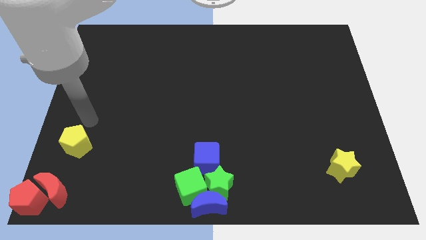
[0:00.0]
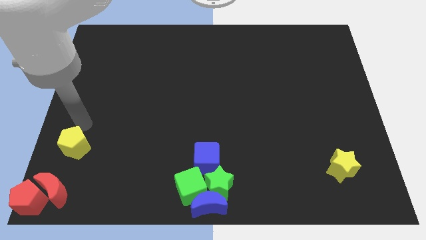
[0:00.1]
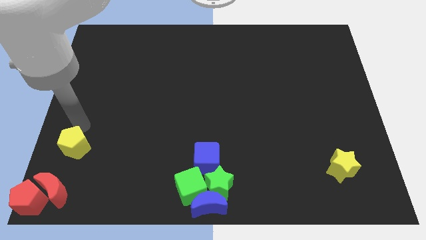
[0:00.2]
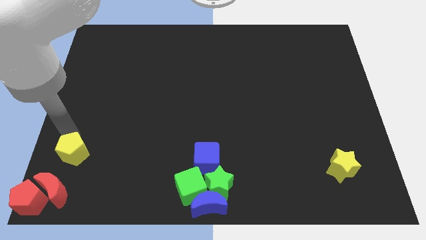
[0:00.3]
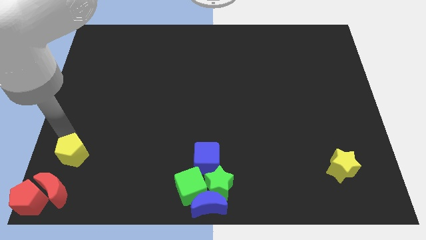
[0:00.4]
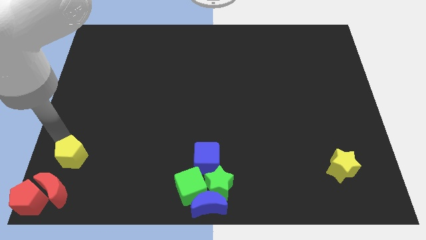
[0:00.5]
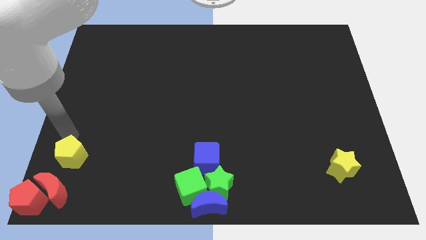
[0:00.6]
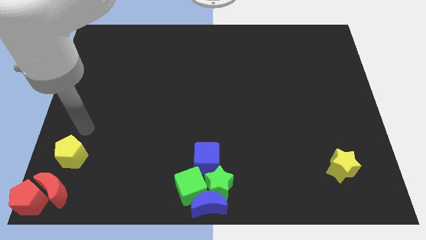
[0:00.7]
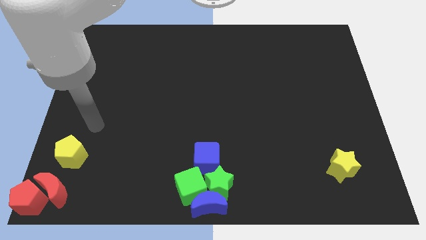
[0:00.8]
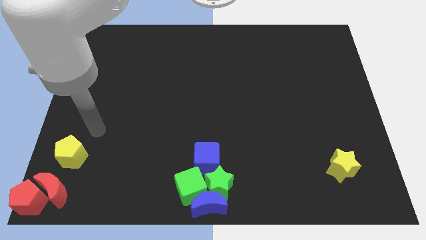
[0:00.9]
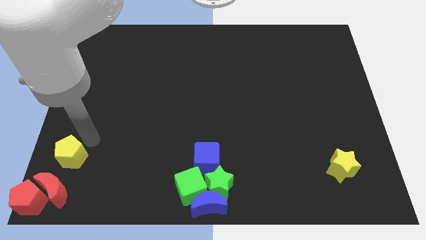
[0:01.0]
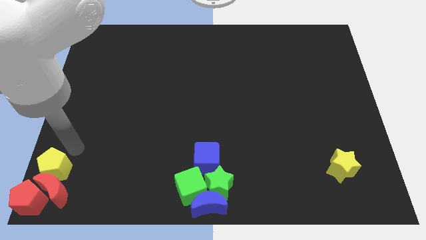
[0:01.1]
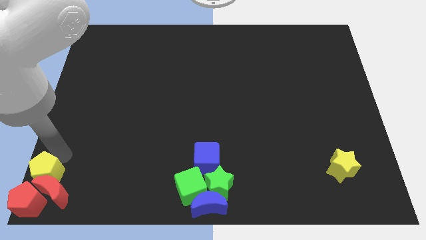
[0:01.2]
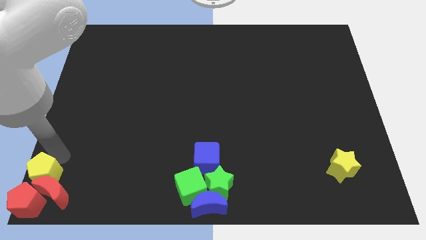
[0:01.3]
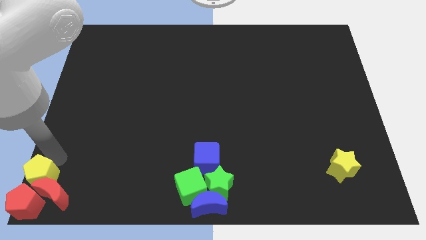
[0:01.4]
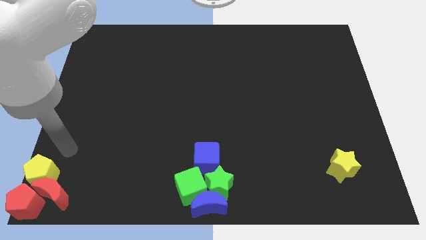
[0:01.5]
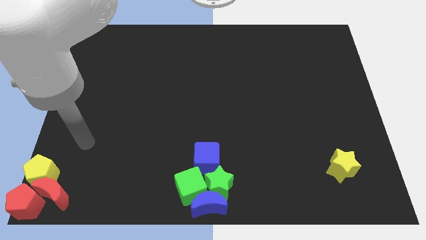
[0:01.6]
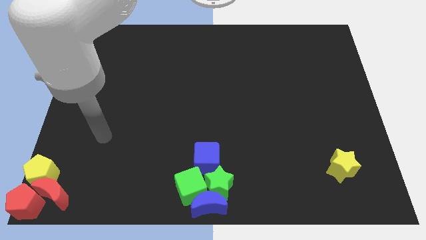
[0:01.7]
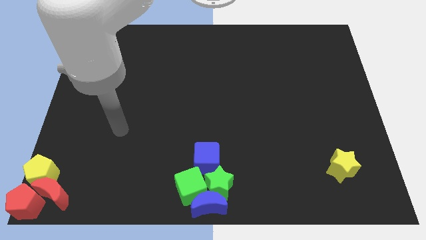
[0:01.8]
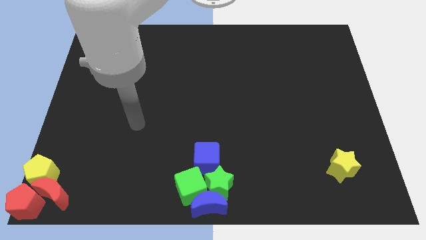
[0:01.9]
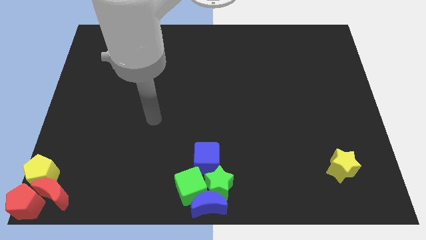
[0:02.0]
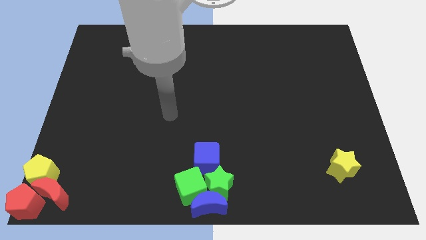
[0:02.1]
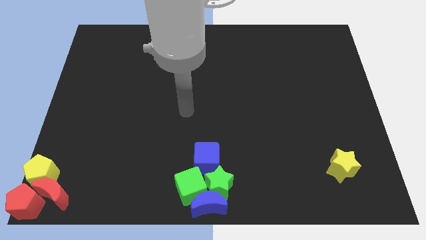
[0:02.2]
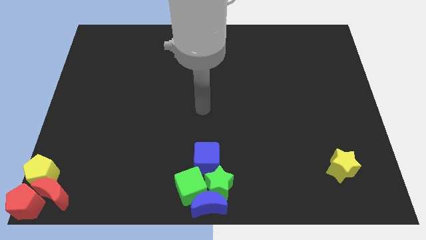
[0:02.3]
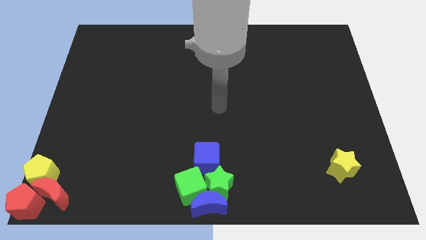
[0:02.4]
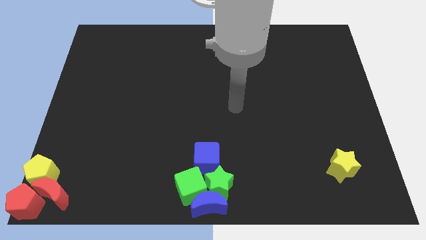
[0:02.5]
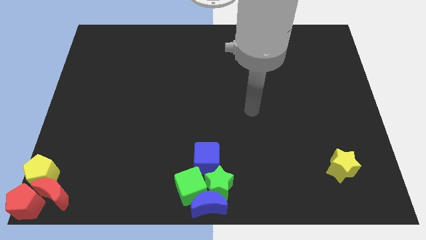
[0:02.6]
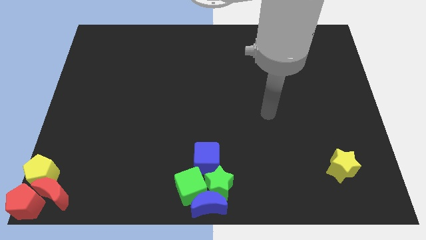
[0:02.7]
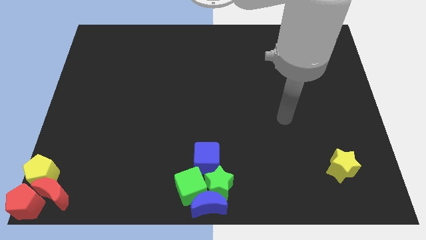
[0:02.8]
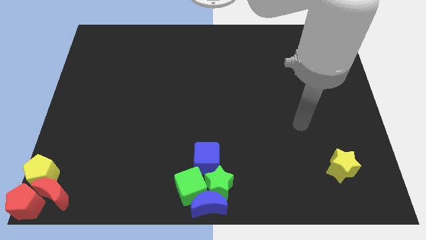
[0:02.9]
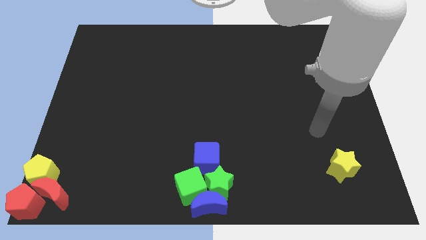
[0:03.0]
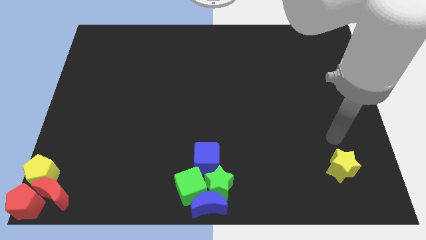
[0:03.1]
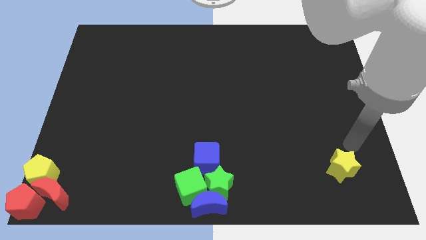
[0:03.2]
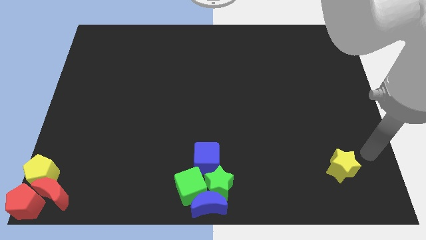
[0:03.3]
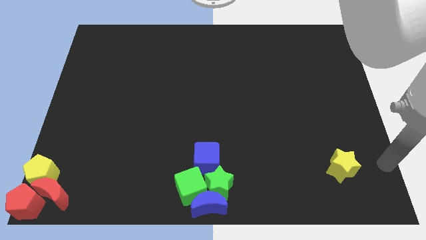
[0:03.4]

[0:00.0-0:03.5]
place the yellow pentagon towards the top of the red crescent

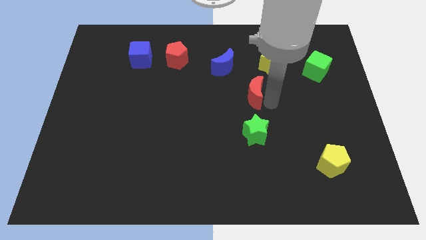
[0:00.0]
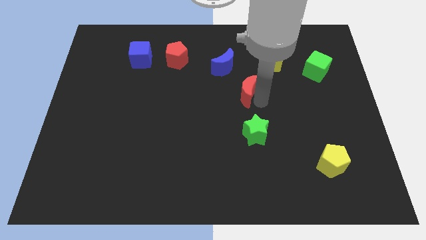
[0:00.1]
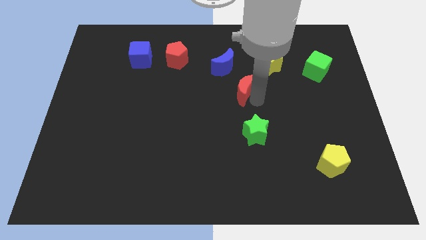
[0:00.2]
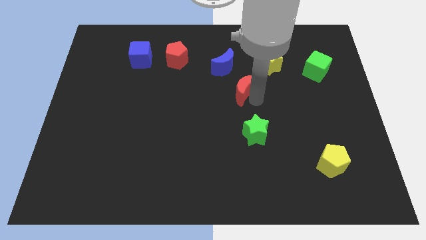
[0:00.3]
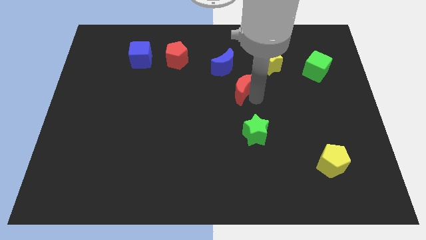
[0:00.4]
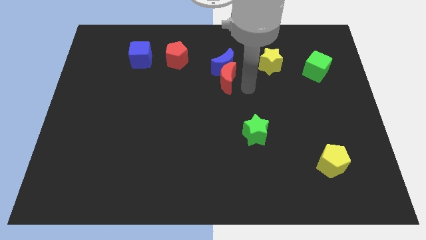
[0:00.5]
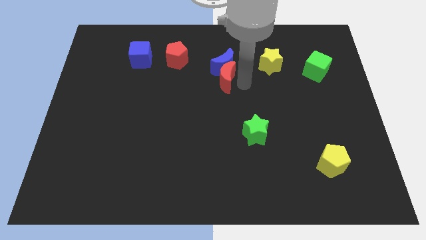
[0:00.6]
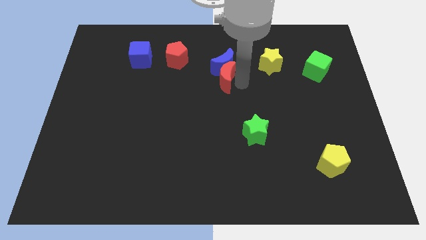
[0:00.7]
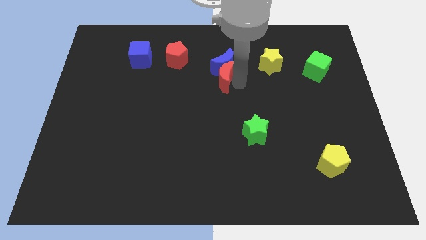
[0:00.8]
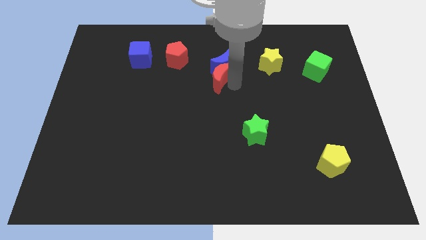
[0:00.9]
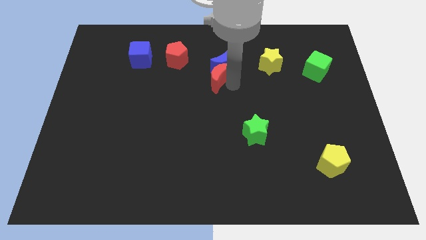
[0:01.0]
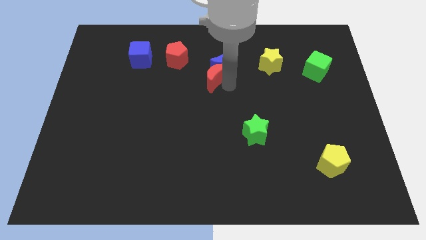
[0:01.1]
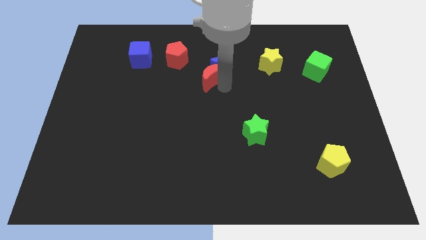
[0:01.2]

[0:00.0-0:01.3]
push the red crescent into blue crescent

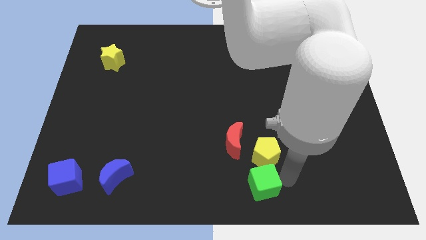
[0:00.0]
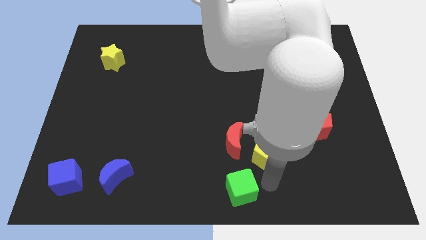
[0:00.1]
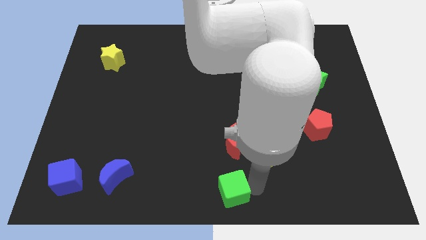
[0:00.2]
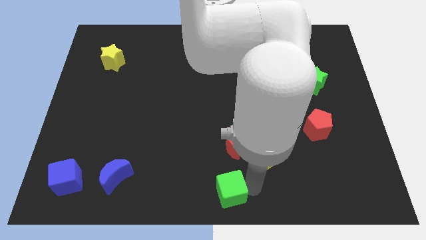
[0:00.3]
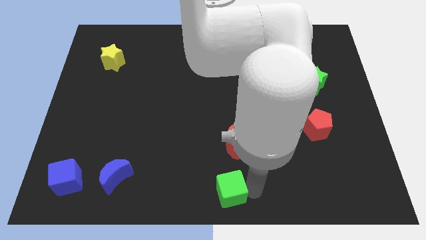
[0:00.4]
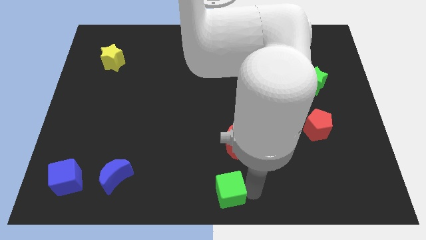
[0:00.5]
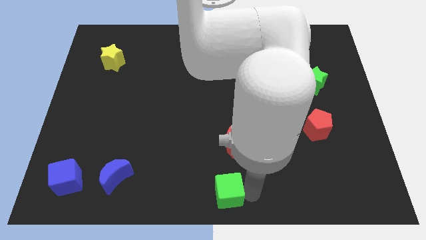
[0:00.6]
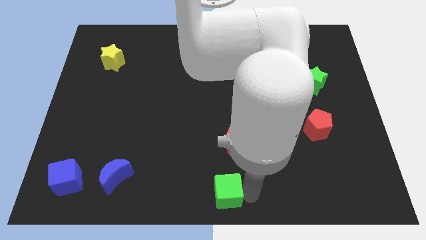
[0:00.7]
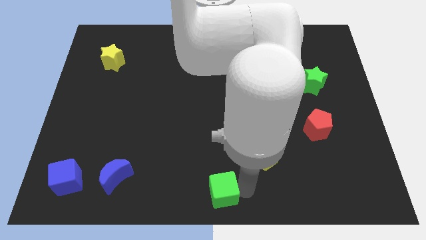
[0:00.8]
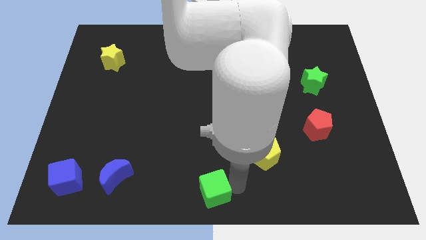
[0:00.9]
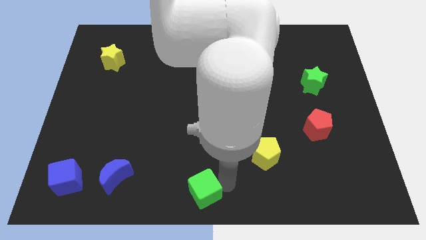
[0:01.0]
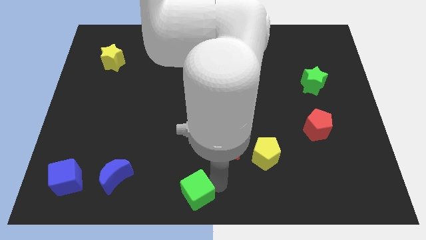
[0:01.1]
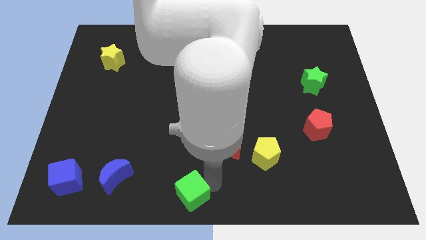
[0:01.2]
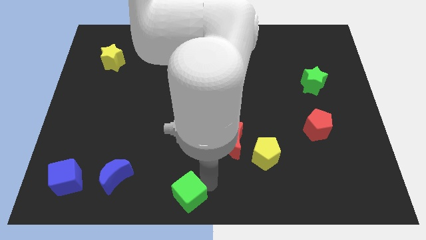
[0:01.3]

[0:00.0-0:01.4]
push green cube towards bottom left

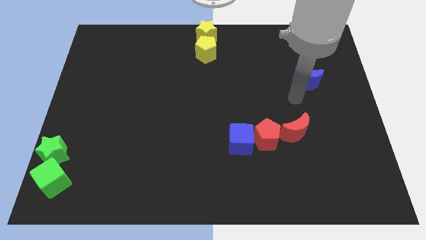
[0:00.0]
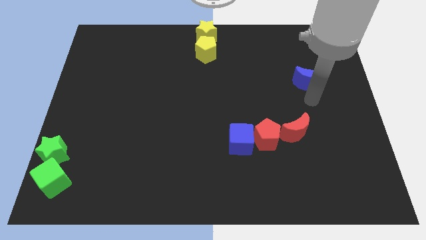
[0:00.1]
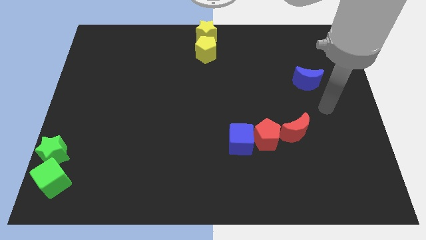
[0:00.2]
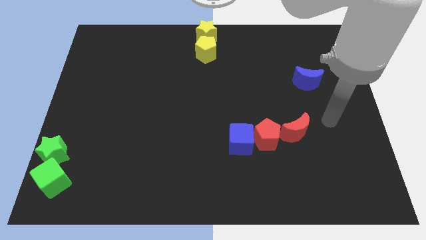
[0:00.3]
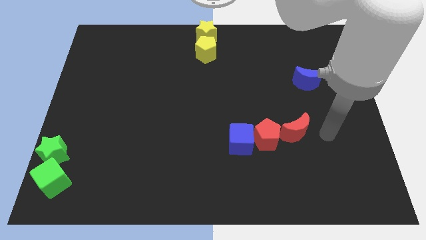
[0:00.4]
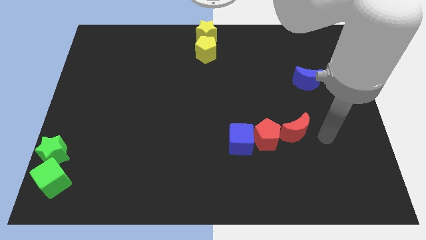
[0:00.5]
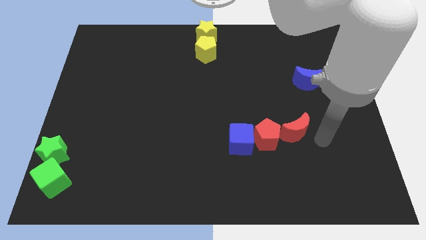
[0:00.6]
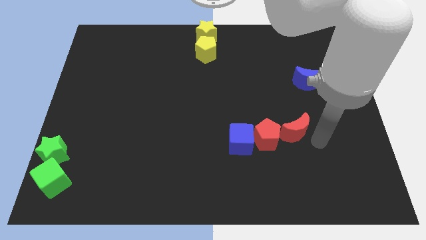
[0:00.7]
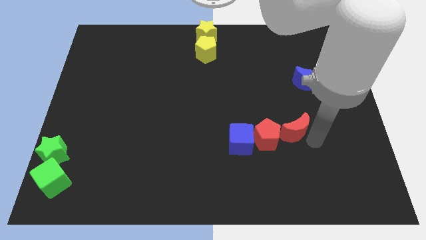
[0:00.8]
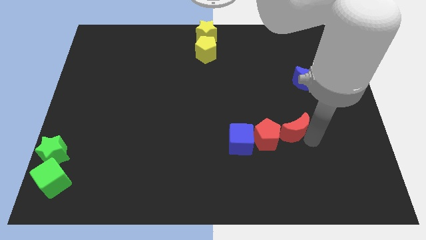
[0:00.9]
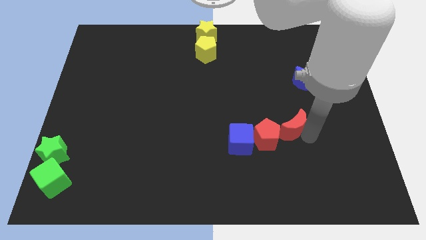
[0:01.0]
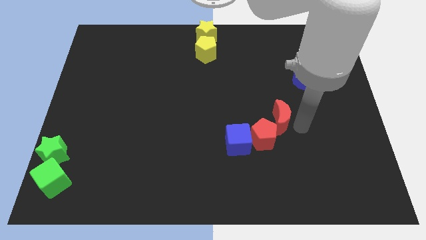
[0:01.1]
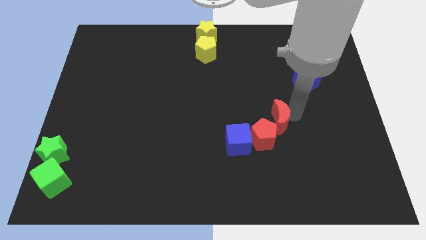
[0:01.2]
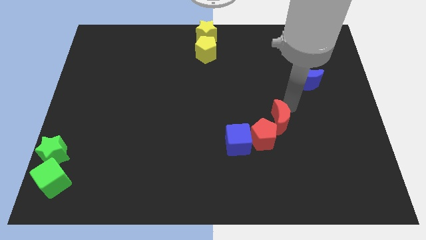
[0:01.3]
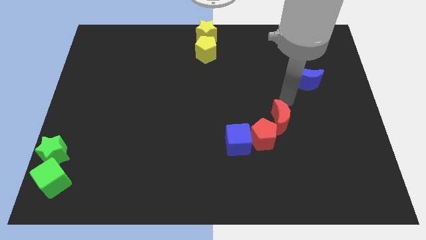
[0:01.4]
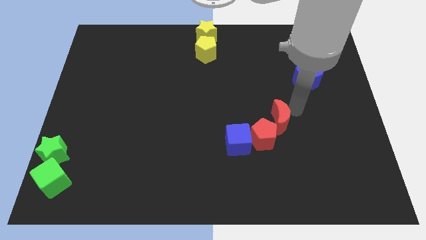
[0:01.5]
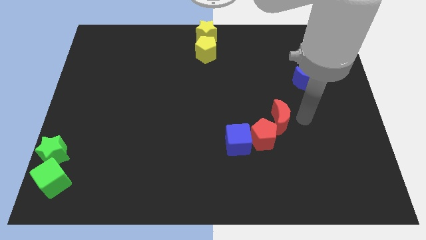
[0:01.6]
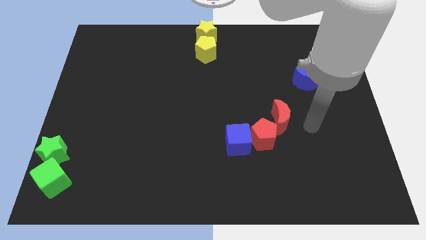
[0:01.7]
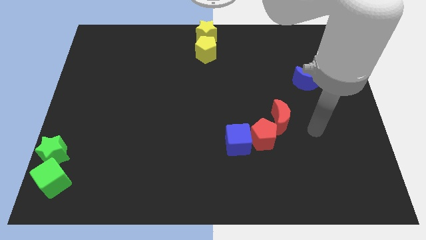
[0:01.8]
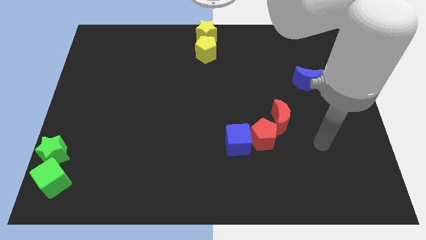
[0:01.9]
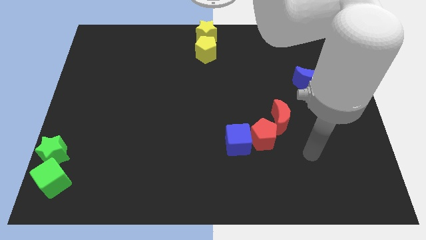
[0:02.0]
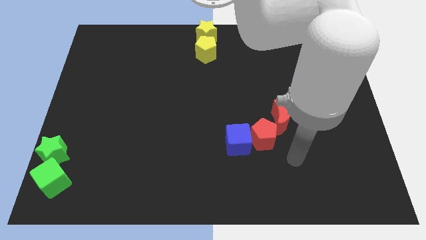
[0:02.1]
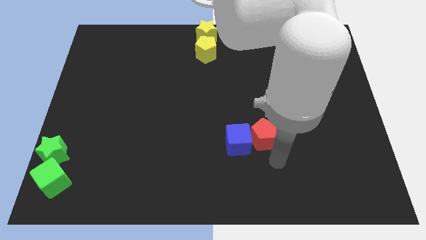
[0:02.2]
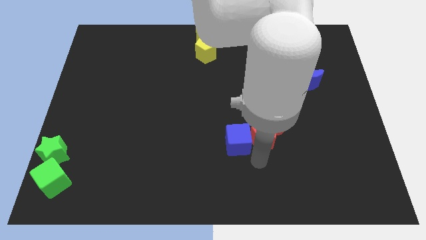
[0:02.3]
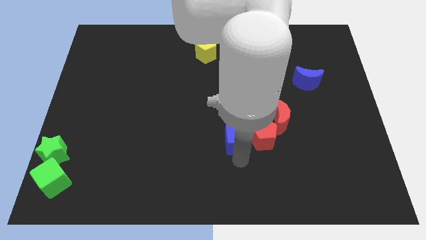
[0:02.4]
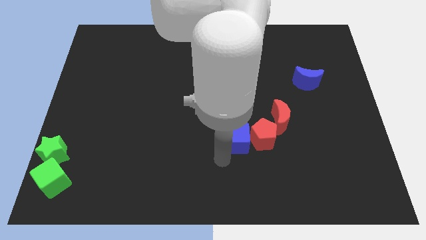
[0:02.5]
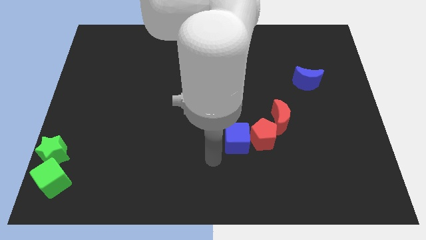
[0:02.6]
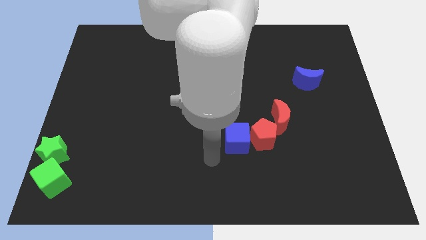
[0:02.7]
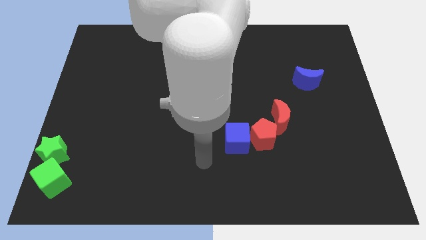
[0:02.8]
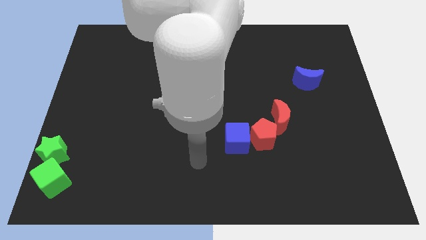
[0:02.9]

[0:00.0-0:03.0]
slightly touch red moon
